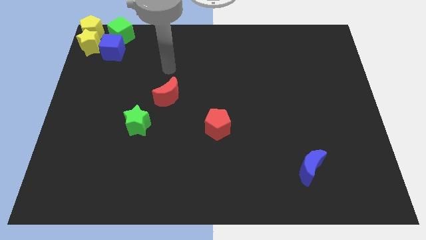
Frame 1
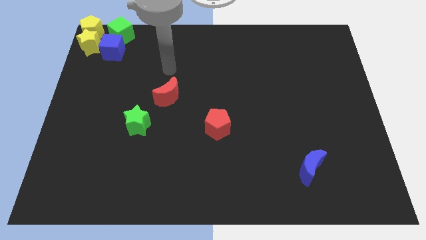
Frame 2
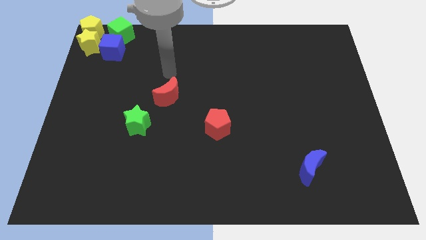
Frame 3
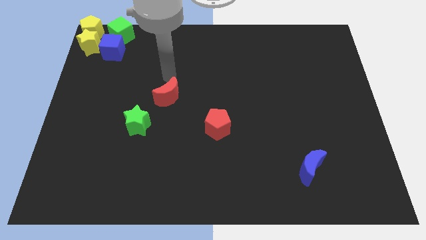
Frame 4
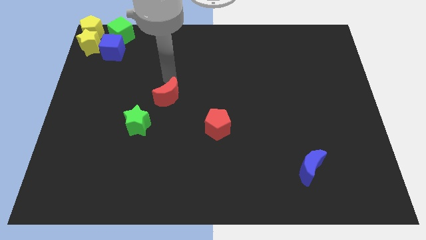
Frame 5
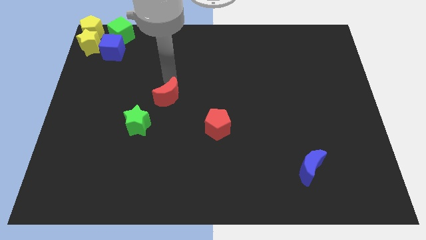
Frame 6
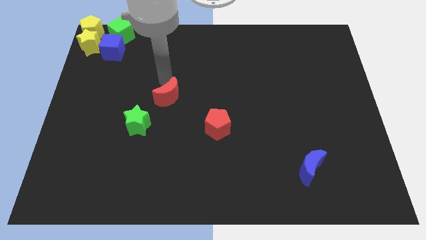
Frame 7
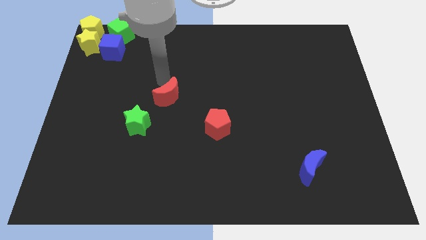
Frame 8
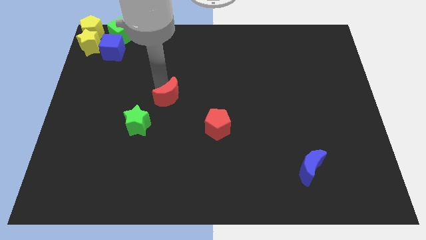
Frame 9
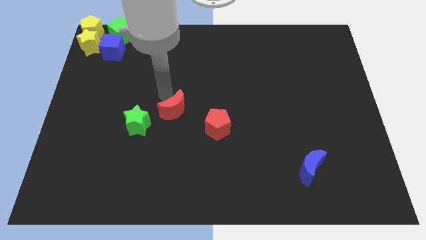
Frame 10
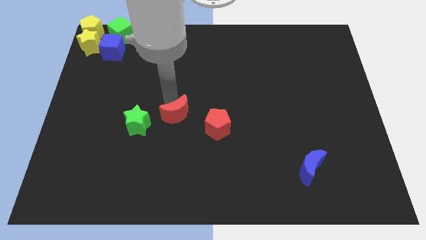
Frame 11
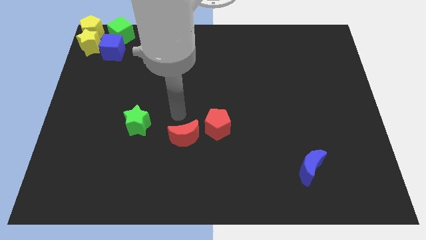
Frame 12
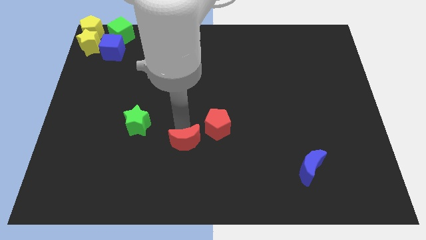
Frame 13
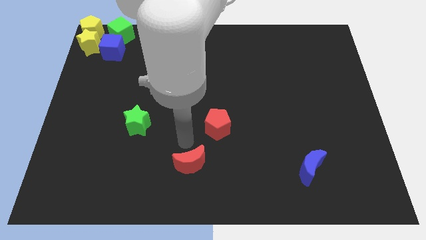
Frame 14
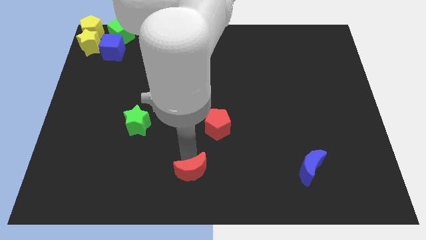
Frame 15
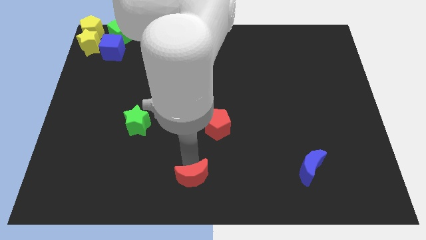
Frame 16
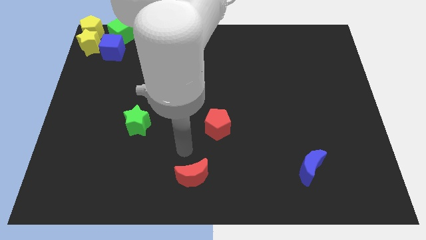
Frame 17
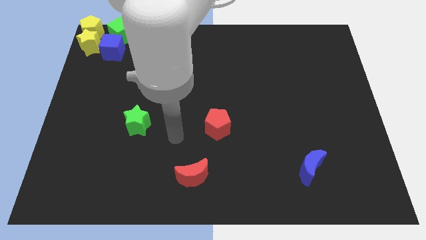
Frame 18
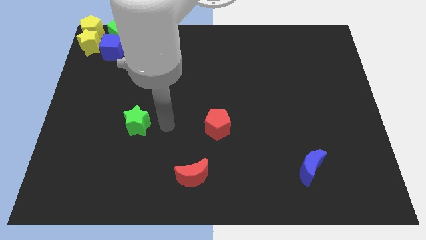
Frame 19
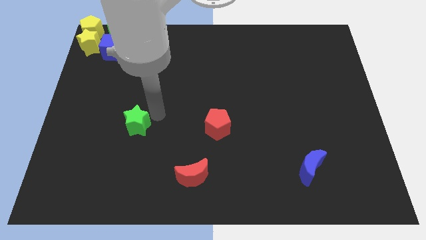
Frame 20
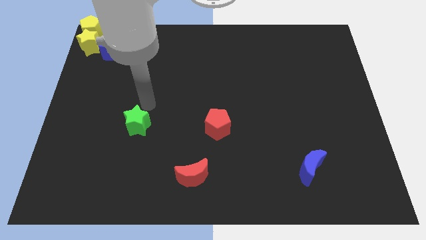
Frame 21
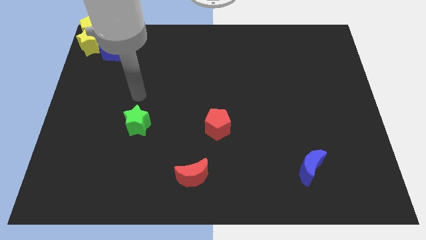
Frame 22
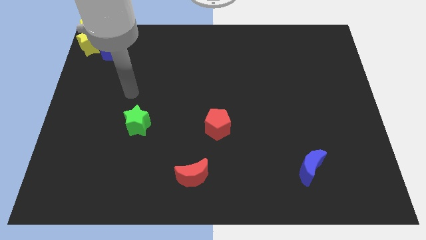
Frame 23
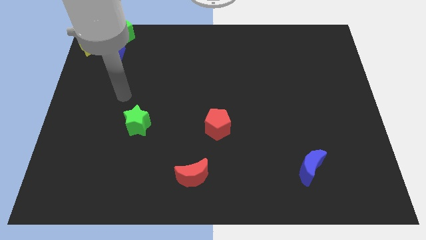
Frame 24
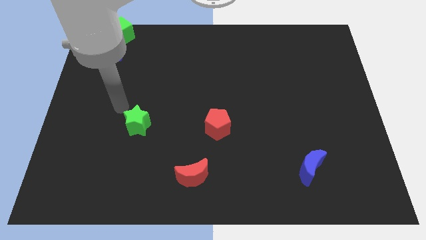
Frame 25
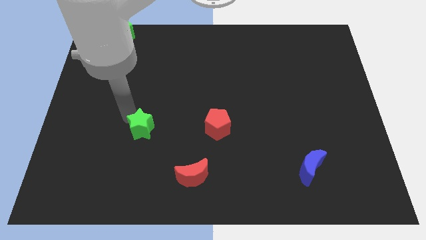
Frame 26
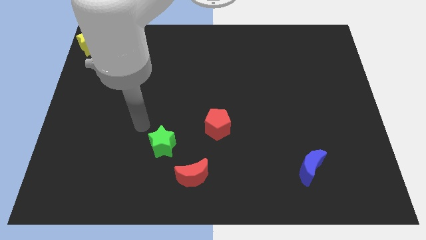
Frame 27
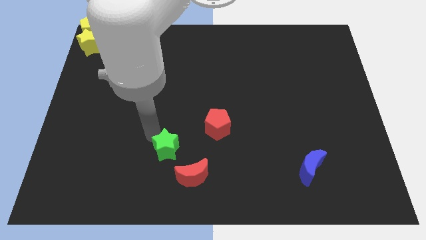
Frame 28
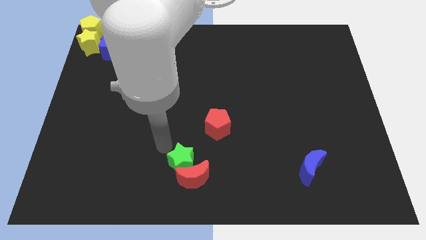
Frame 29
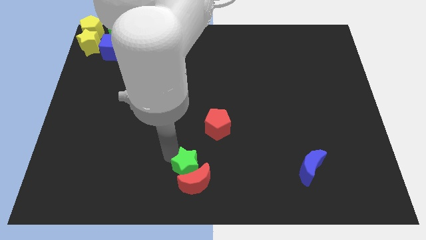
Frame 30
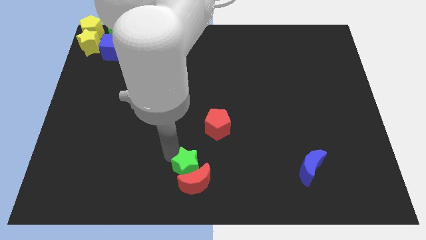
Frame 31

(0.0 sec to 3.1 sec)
push the green star into red crescent

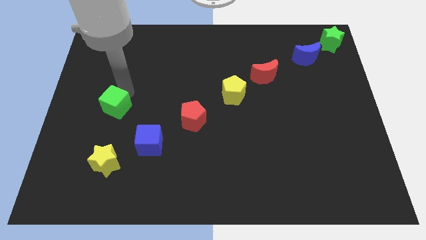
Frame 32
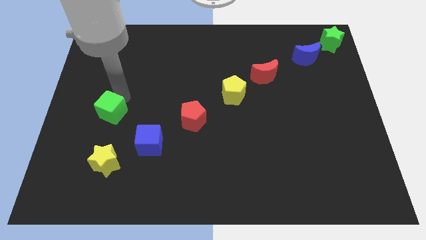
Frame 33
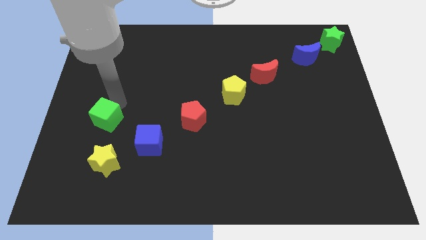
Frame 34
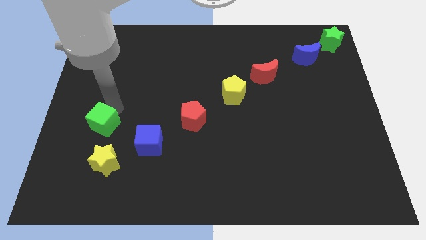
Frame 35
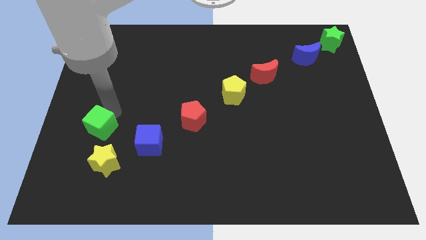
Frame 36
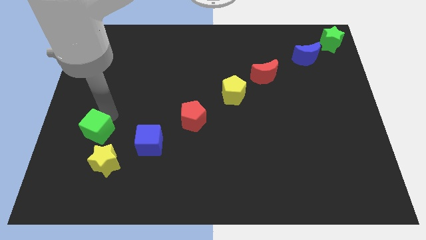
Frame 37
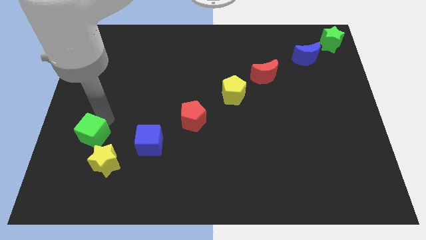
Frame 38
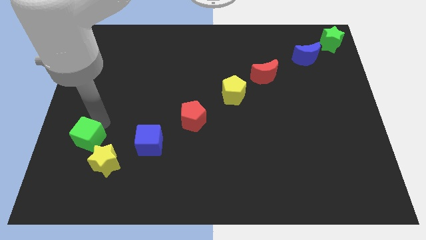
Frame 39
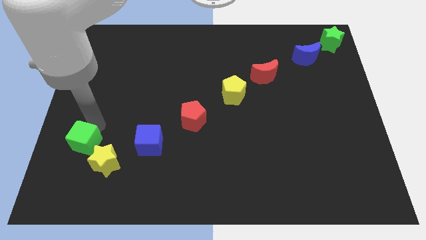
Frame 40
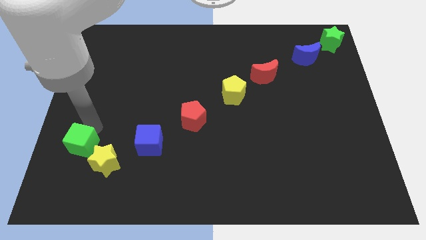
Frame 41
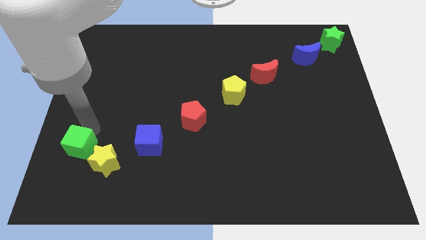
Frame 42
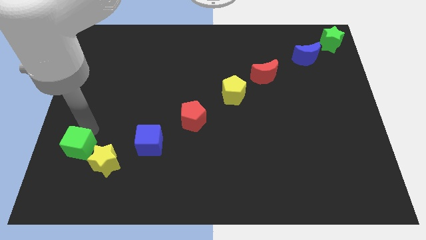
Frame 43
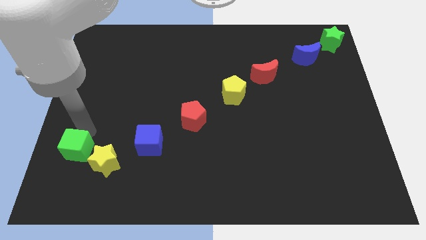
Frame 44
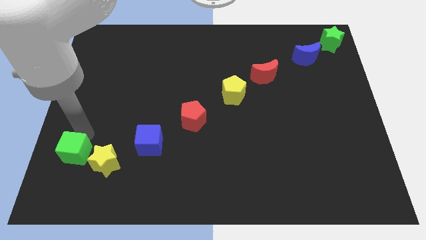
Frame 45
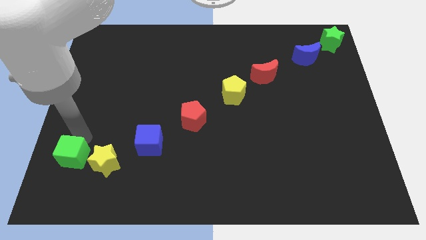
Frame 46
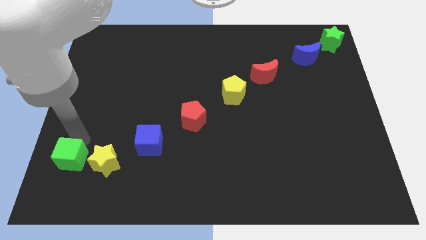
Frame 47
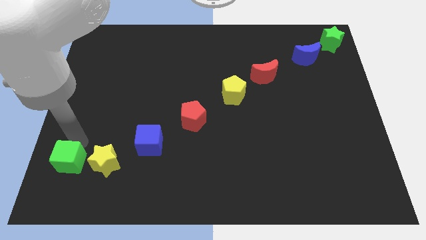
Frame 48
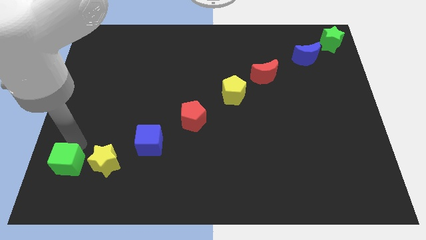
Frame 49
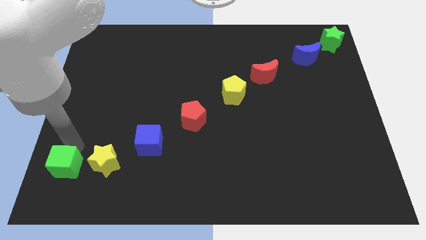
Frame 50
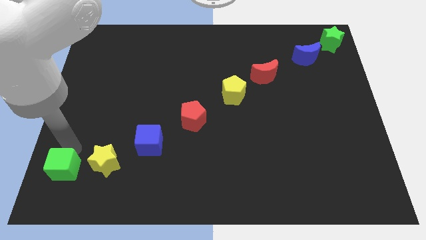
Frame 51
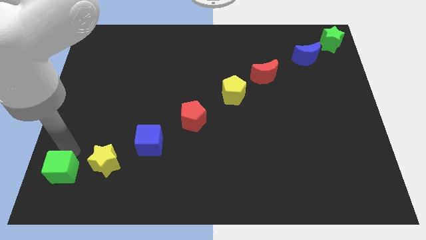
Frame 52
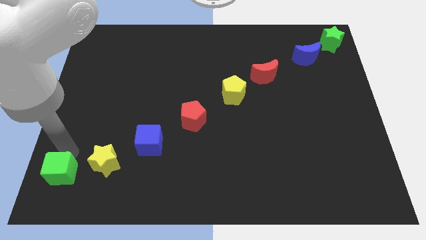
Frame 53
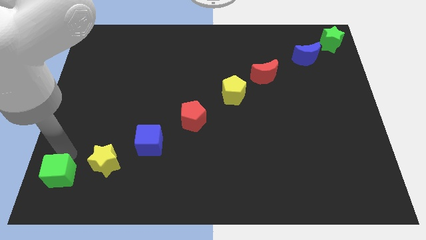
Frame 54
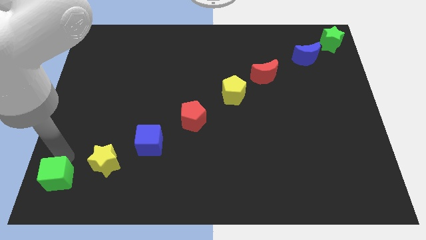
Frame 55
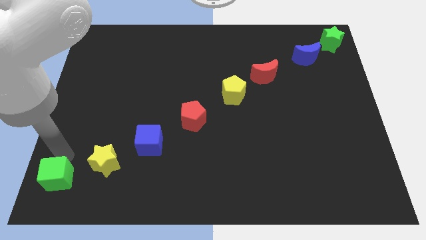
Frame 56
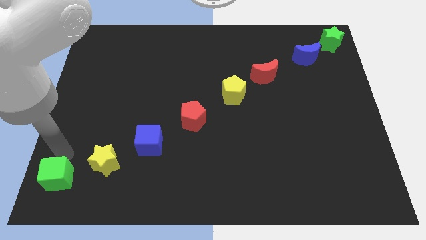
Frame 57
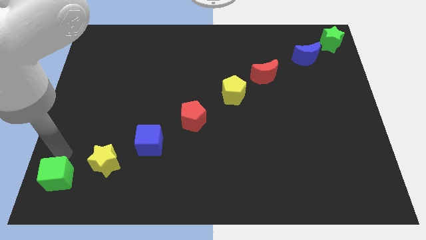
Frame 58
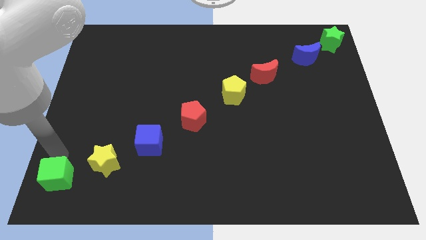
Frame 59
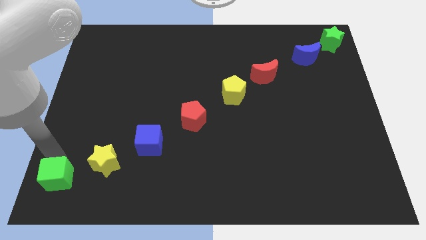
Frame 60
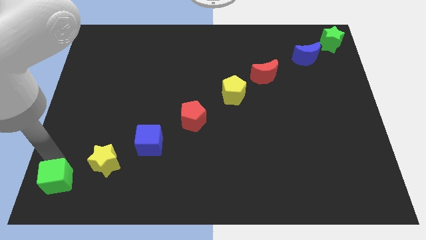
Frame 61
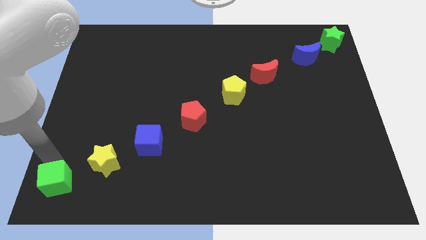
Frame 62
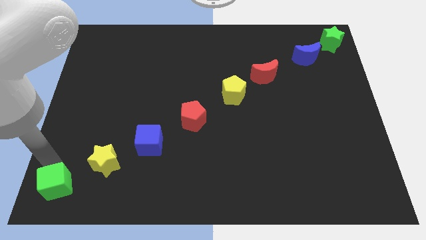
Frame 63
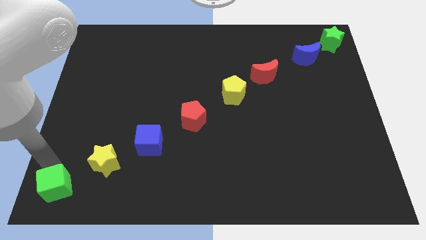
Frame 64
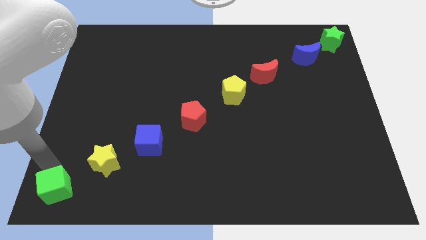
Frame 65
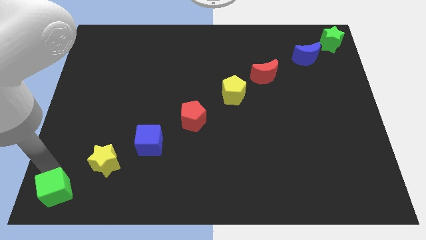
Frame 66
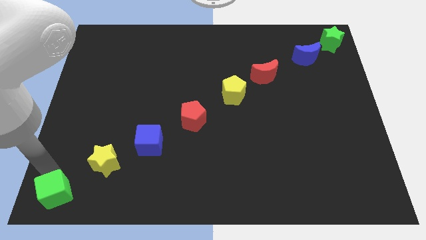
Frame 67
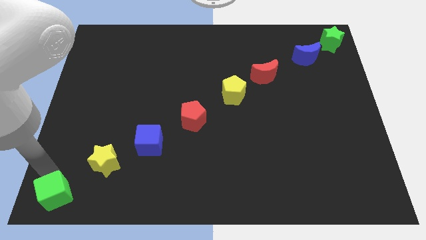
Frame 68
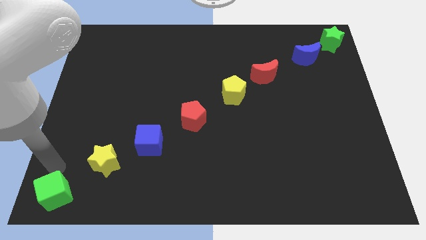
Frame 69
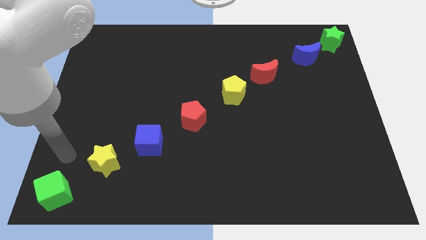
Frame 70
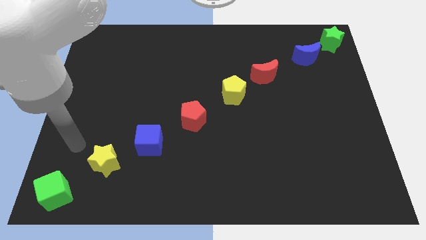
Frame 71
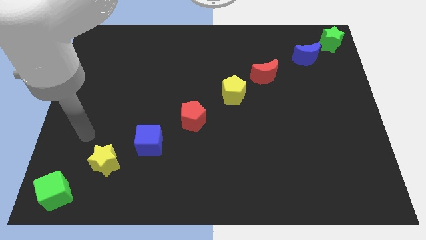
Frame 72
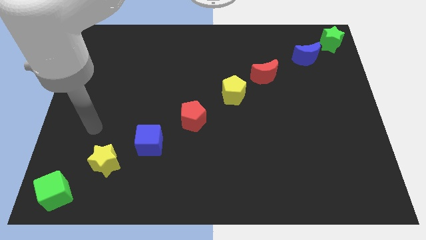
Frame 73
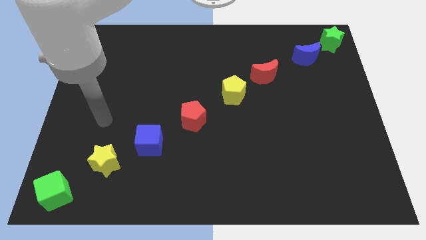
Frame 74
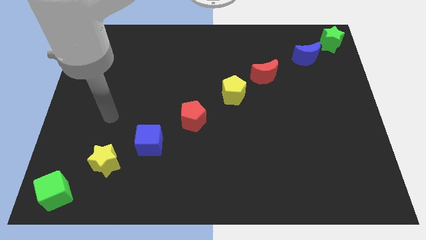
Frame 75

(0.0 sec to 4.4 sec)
push the green cube to the bottom left corner of the board

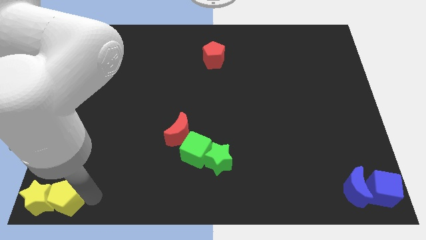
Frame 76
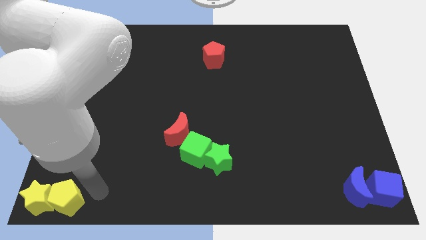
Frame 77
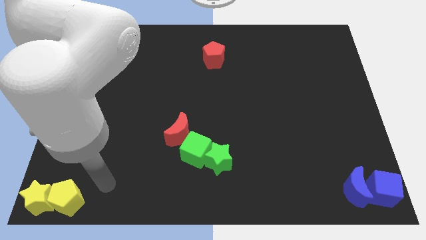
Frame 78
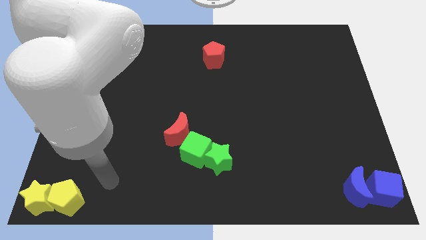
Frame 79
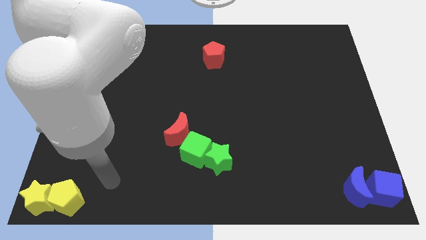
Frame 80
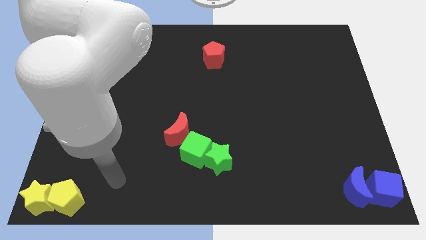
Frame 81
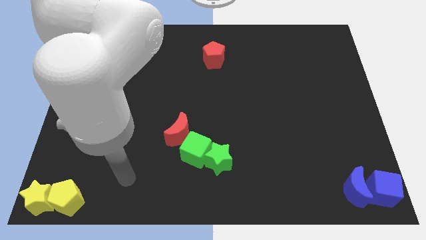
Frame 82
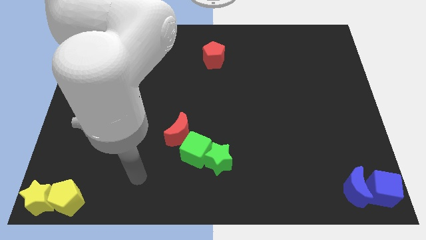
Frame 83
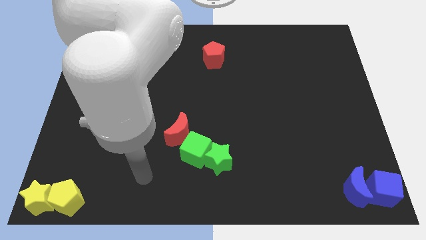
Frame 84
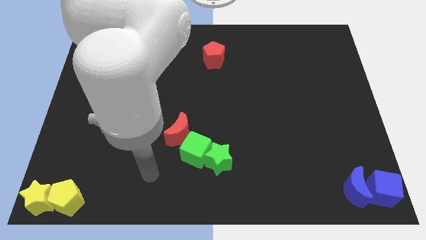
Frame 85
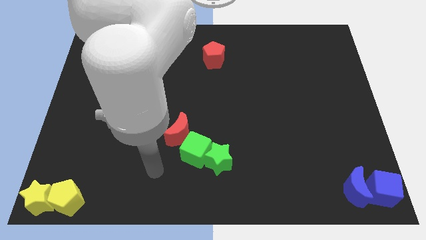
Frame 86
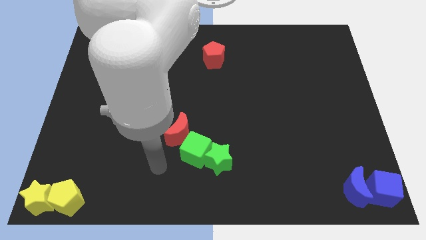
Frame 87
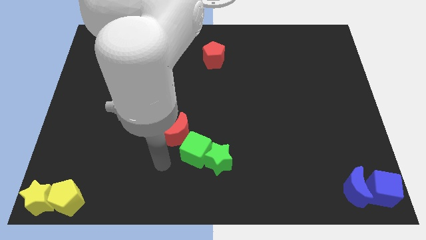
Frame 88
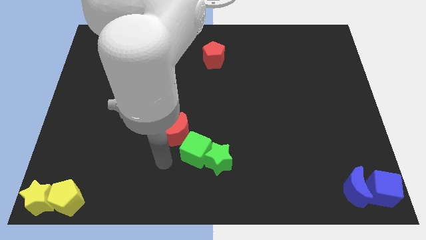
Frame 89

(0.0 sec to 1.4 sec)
move the arm away from the yellow pentagon

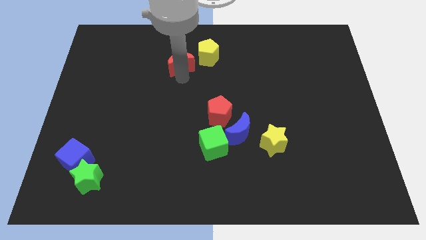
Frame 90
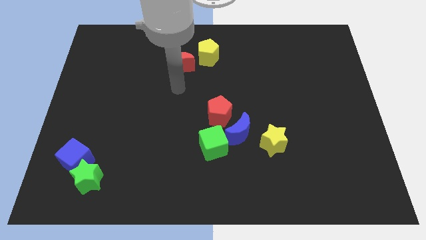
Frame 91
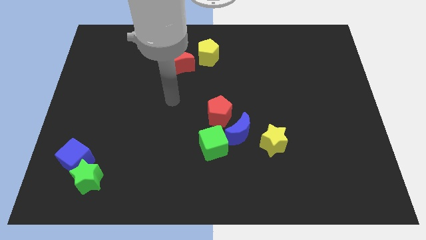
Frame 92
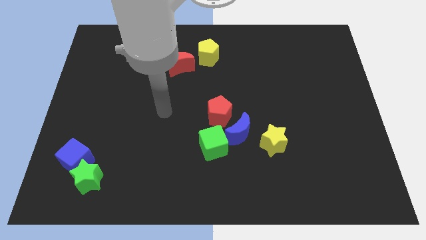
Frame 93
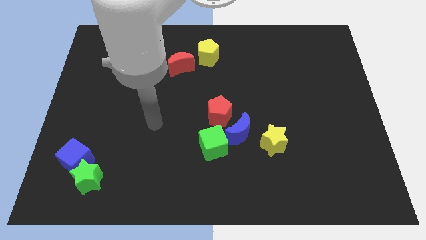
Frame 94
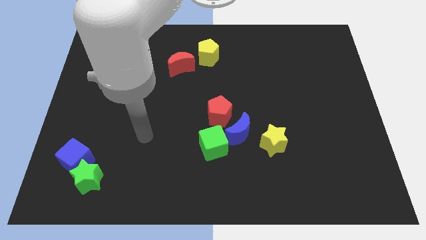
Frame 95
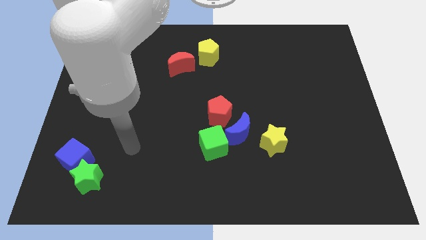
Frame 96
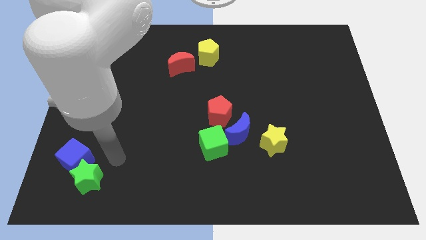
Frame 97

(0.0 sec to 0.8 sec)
move your arm away from the red crescent
